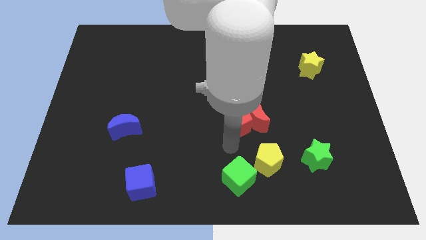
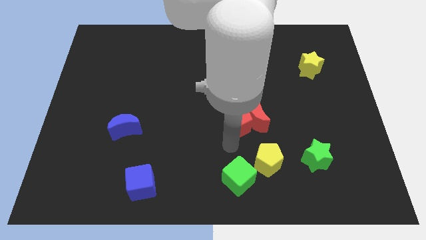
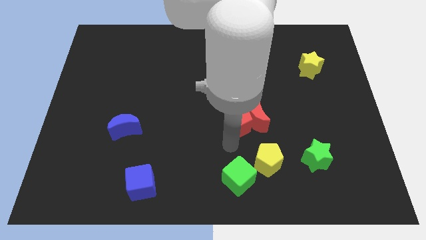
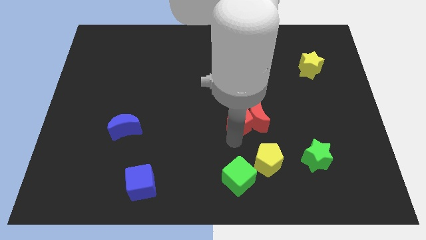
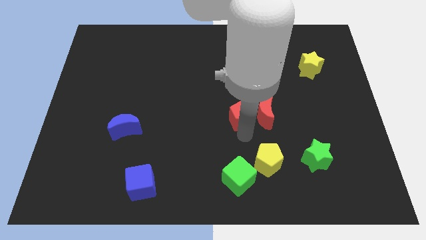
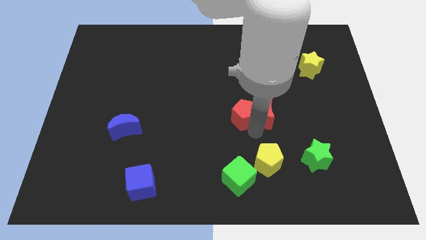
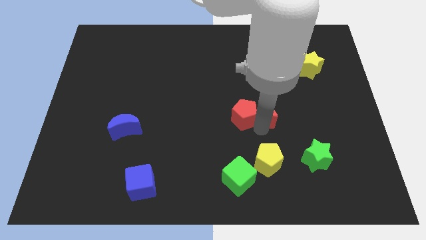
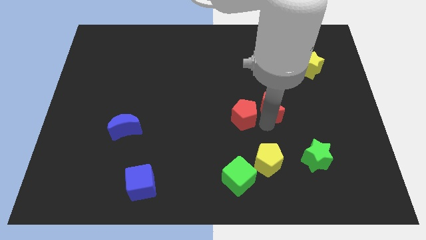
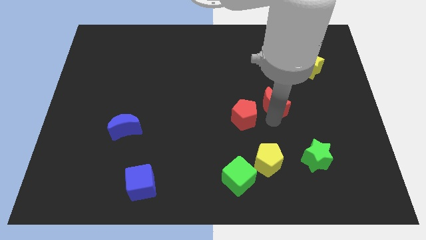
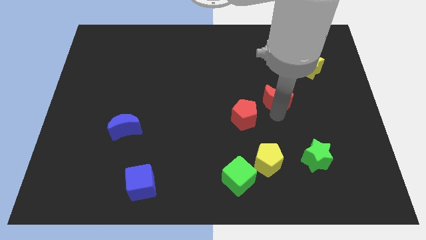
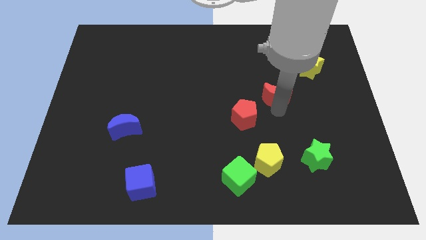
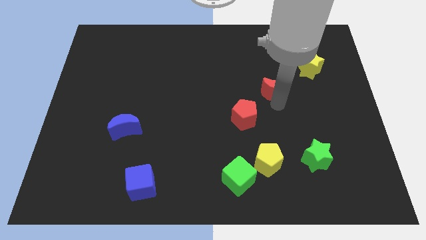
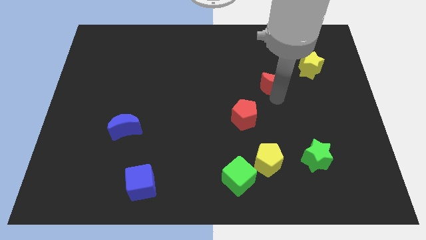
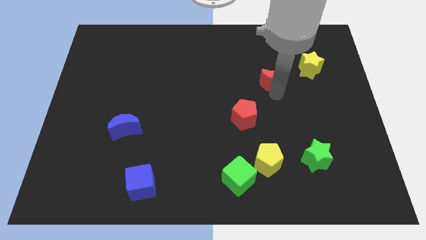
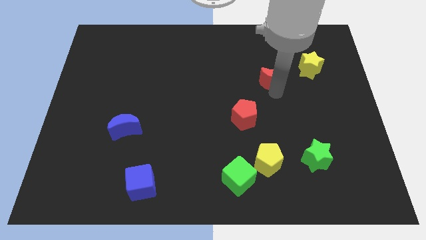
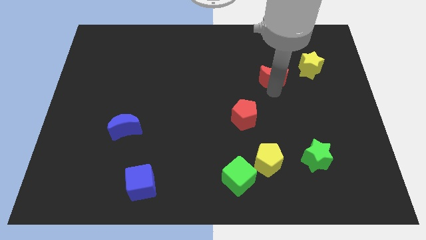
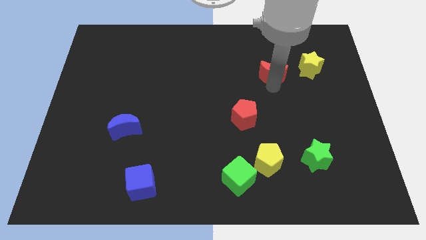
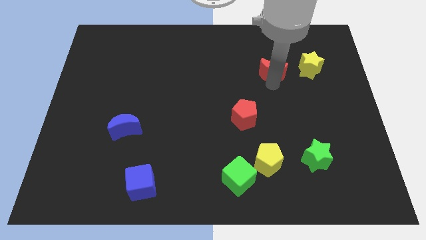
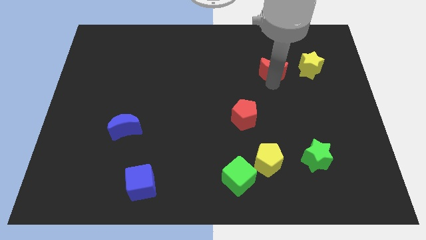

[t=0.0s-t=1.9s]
separate the red moon from the red pentagon

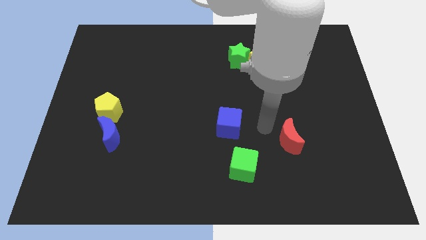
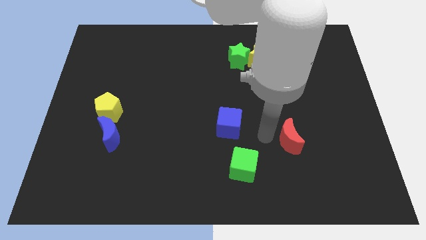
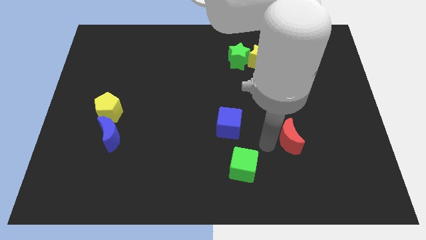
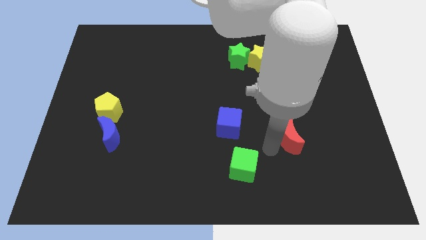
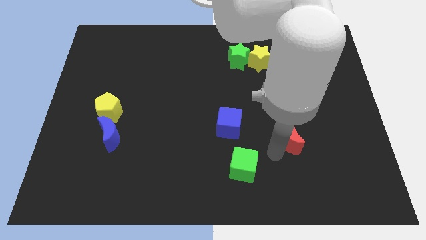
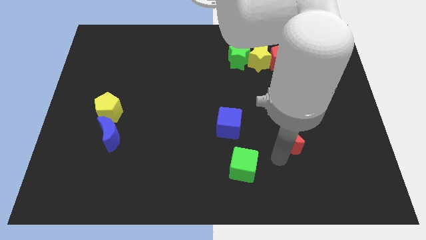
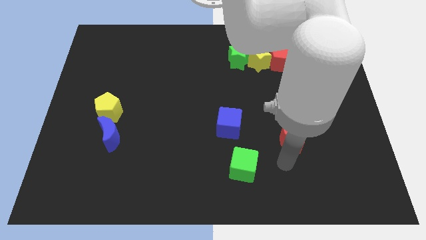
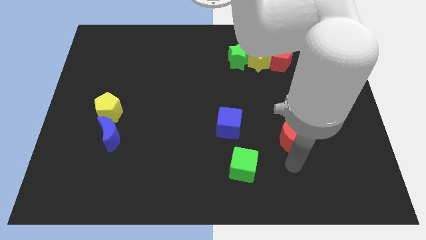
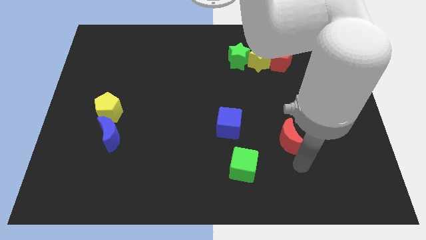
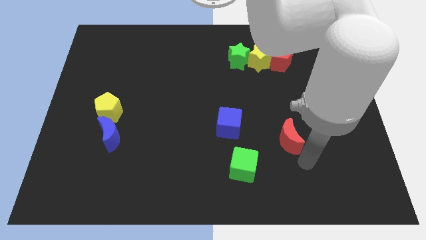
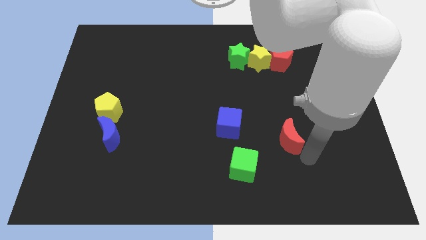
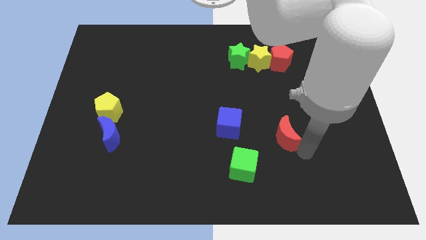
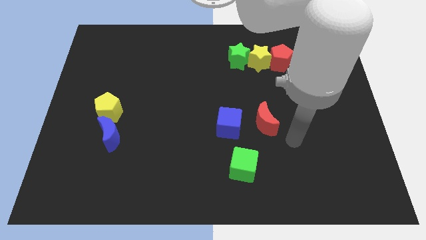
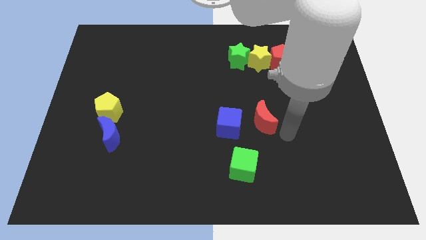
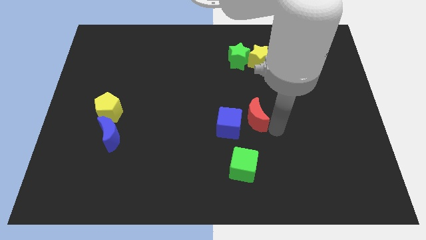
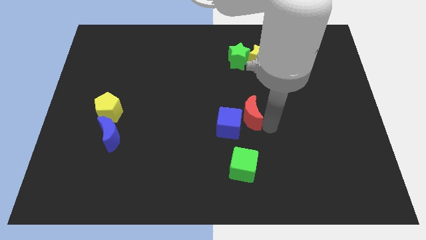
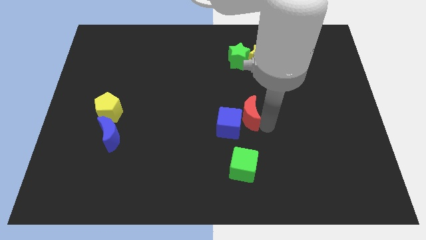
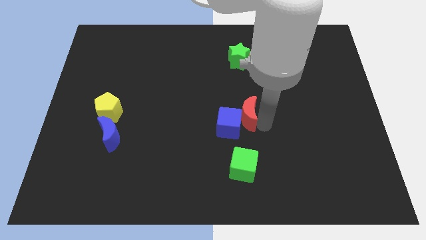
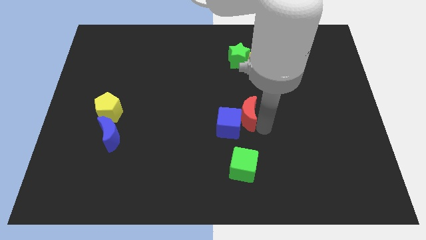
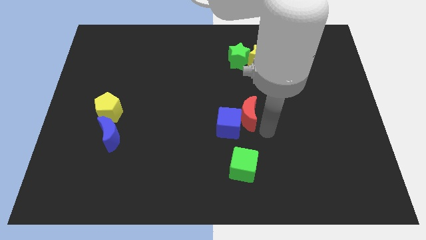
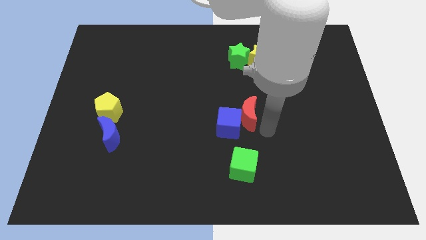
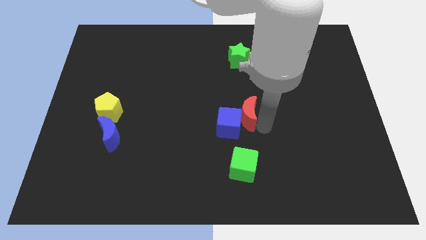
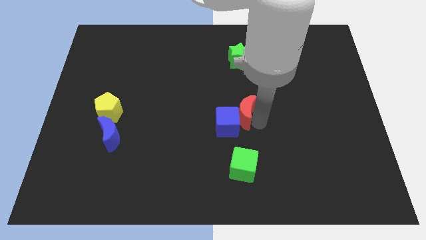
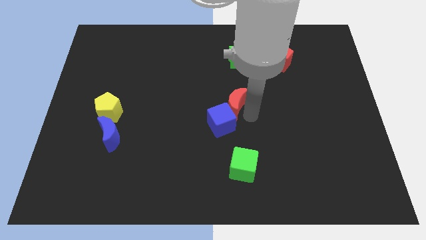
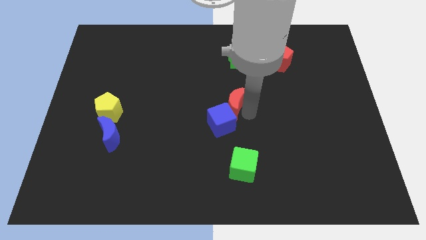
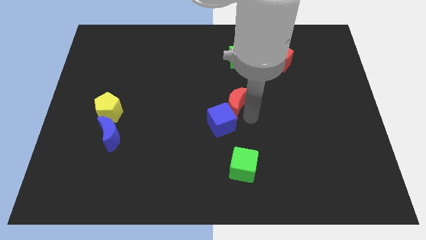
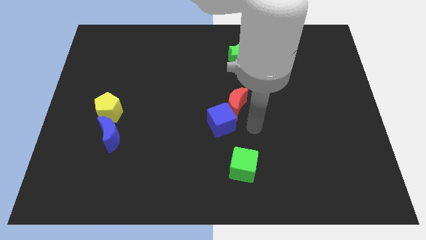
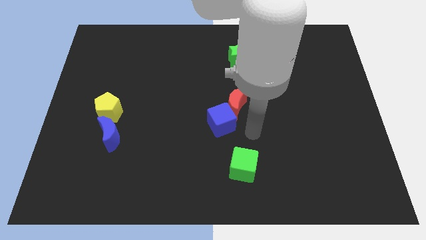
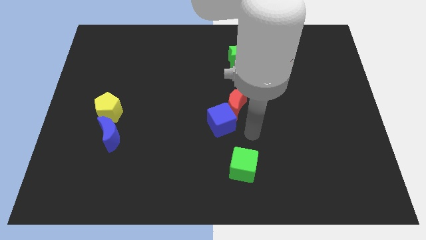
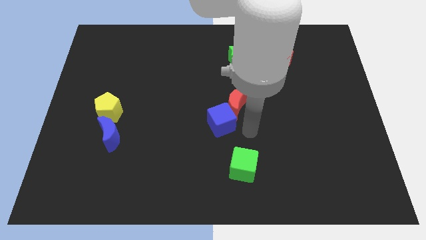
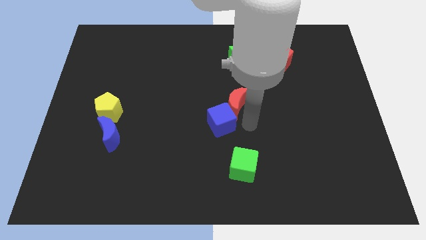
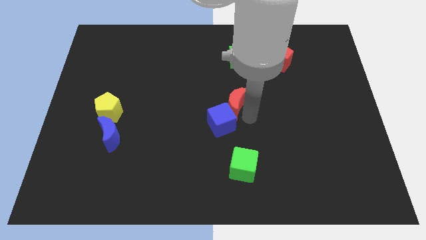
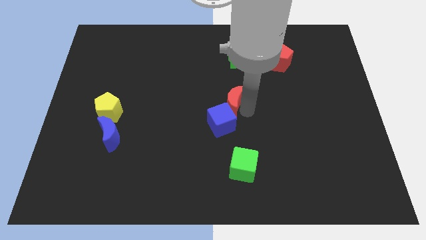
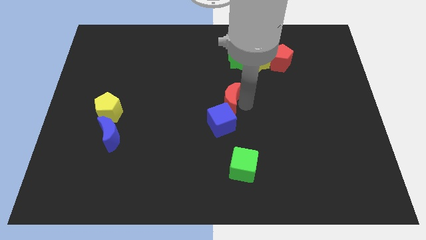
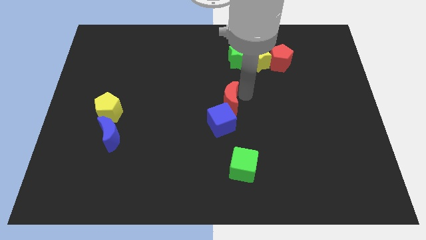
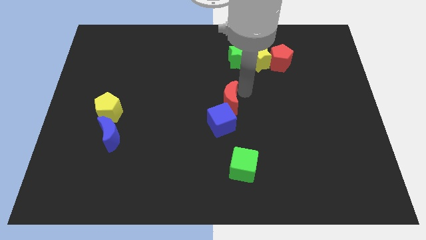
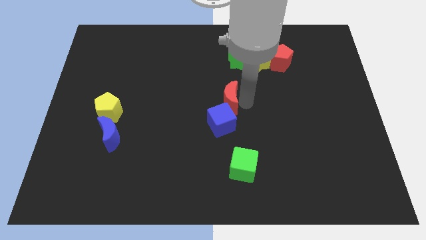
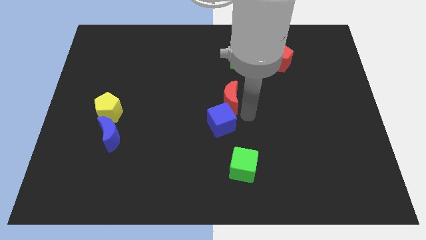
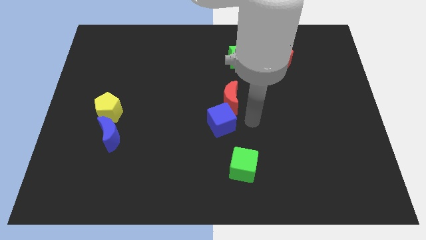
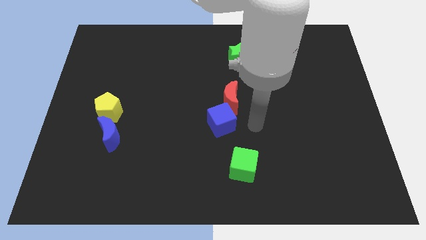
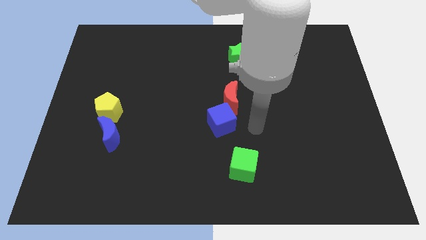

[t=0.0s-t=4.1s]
move the red crescent towards the center of the board

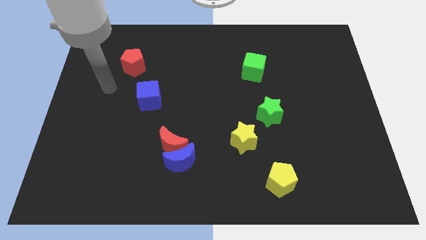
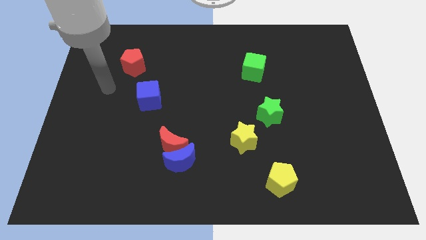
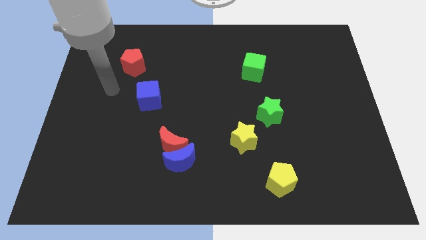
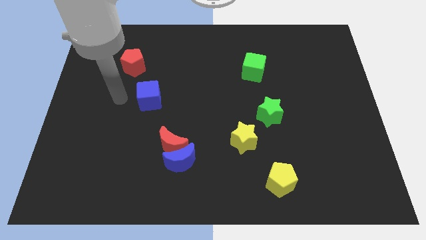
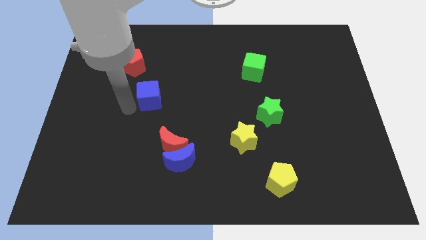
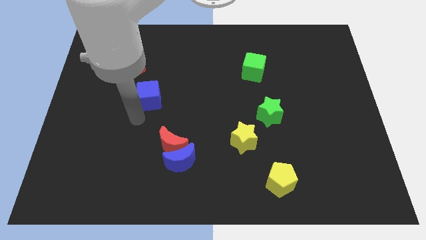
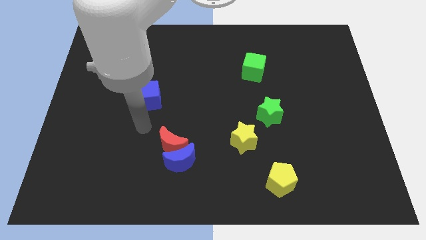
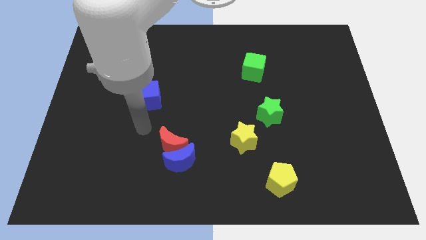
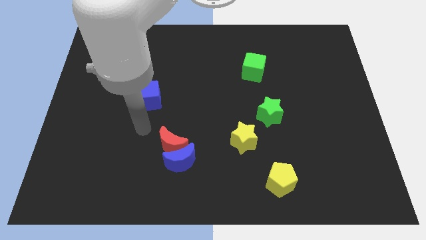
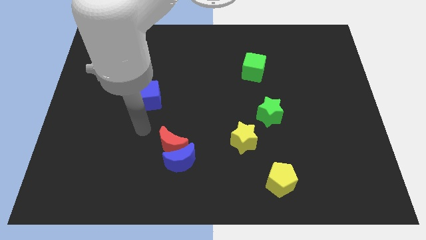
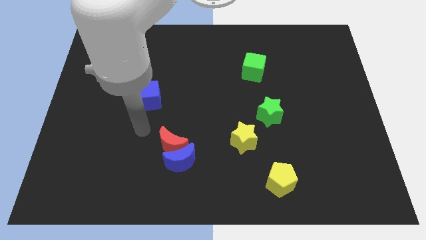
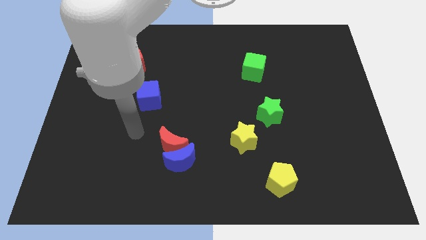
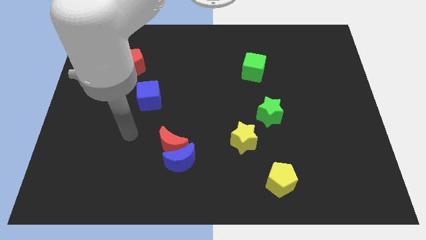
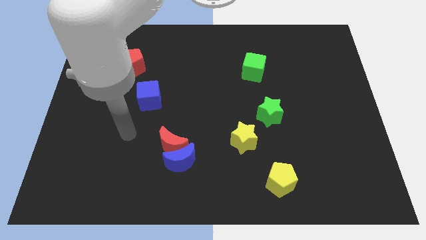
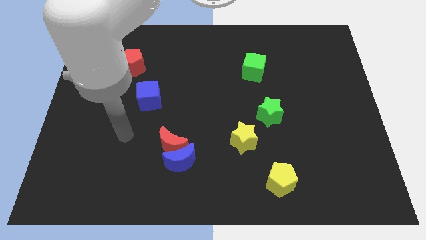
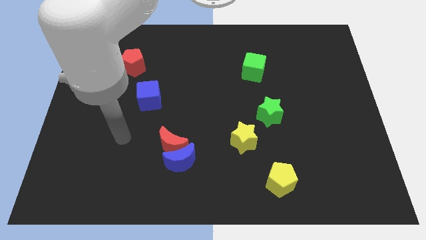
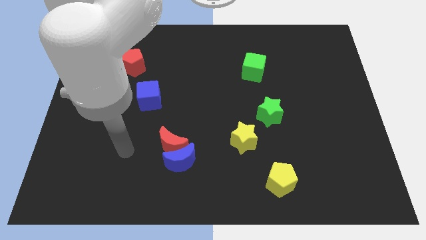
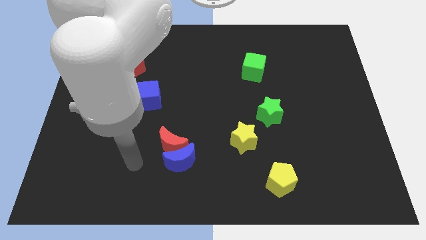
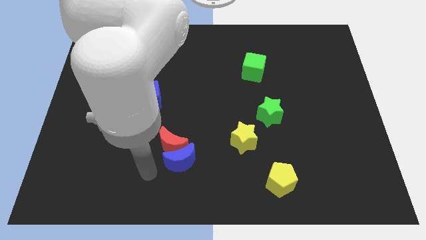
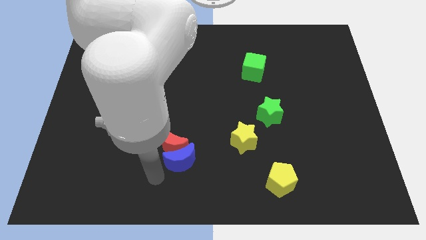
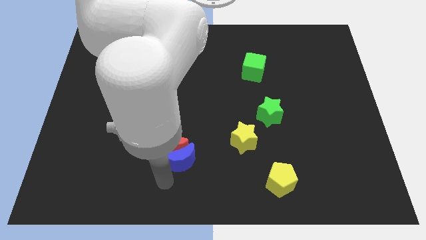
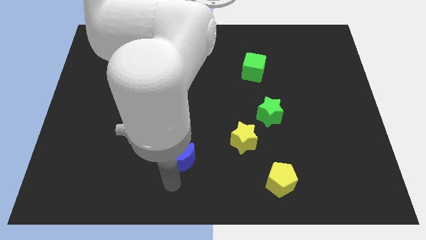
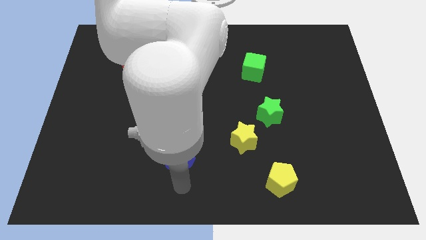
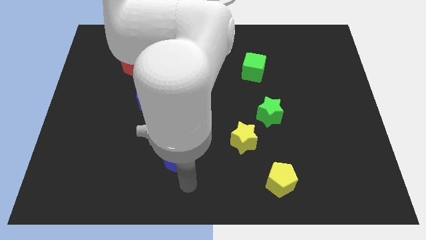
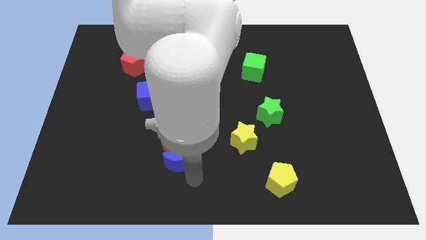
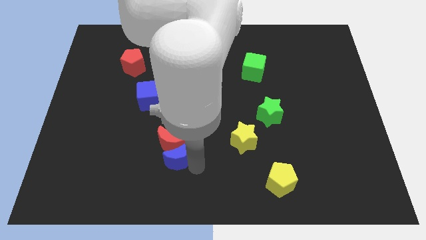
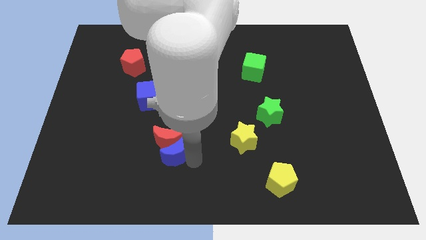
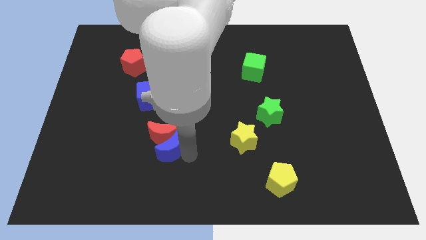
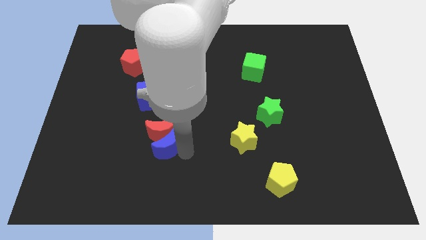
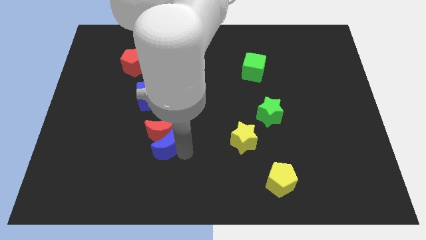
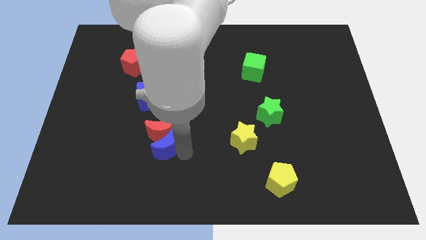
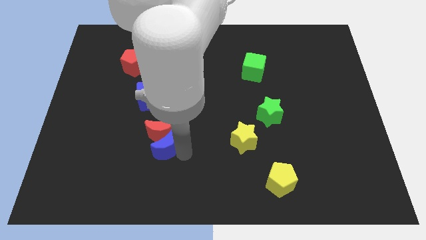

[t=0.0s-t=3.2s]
push the red moon and blue moon up slightly
